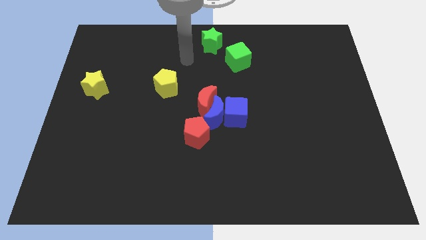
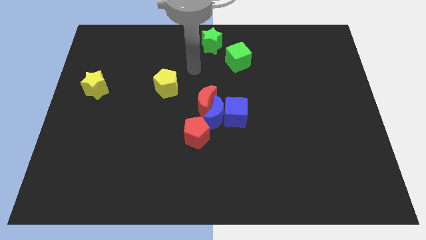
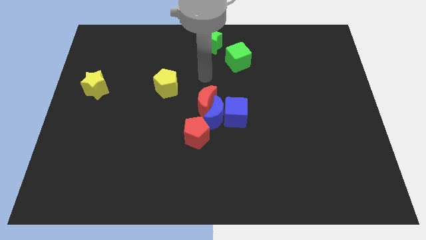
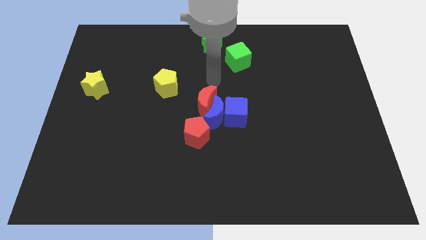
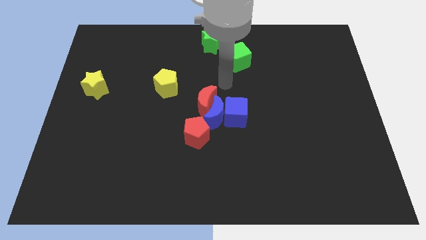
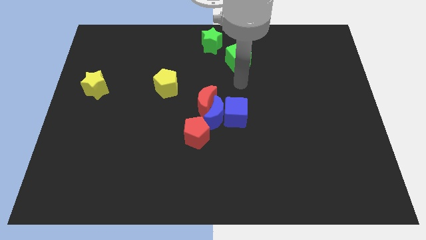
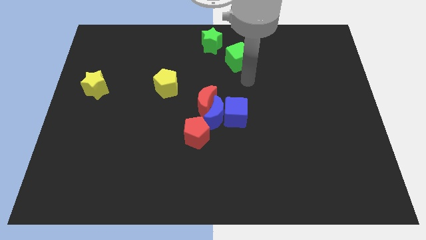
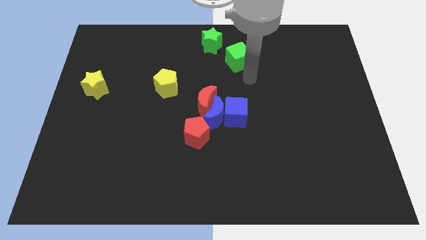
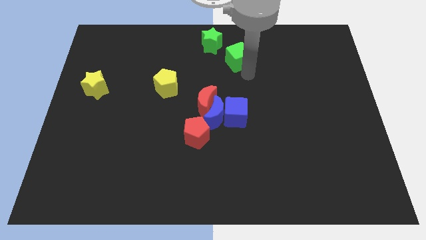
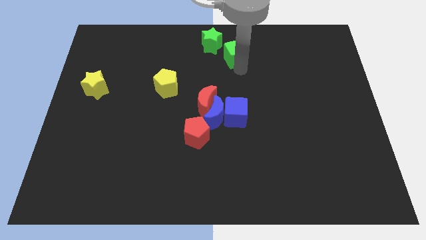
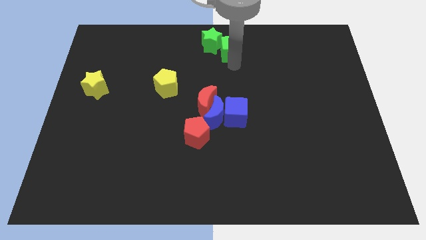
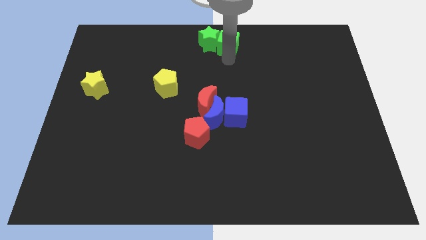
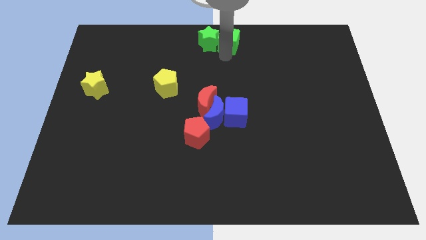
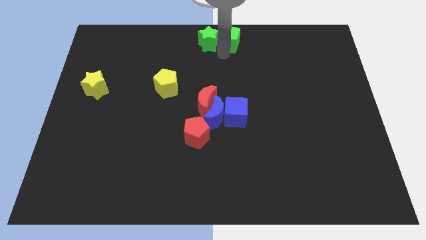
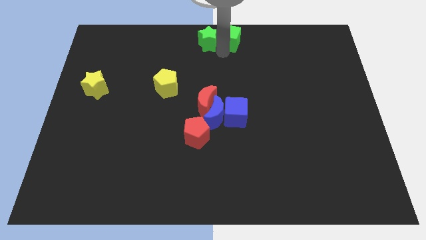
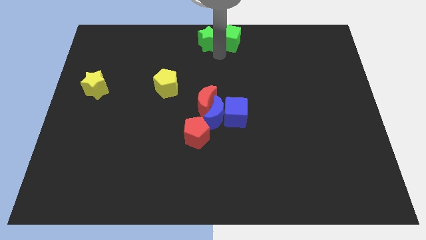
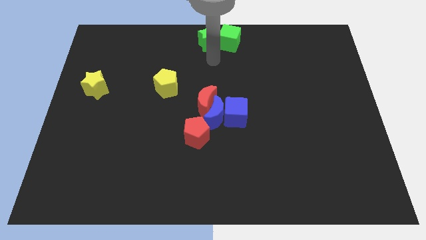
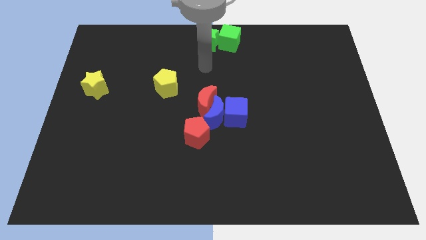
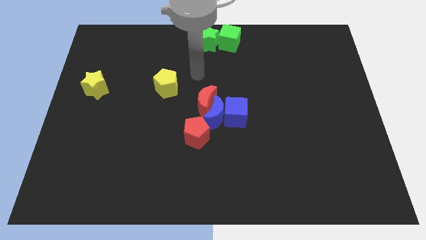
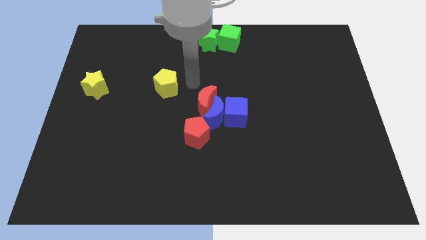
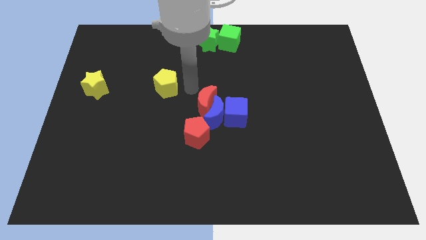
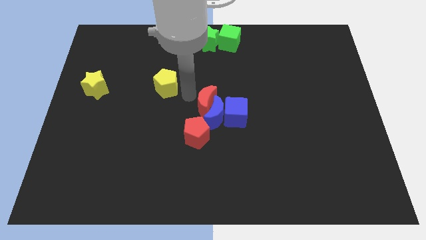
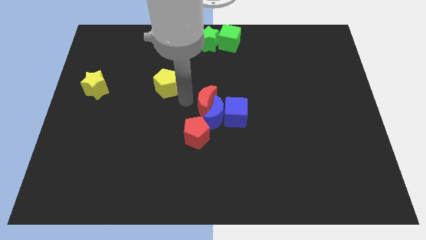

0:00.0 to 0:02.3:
push the green cube into the green star

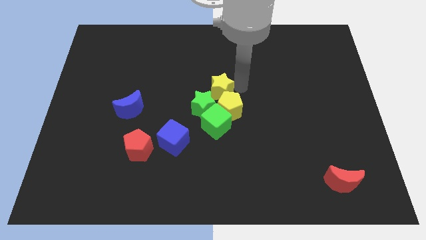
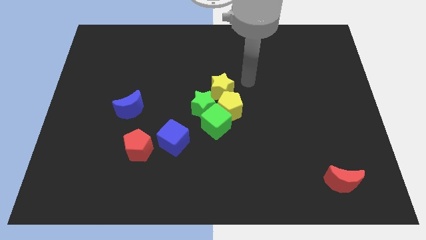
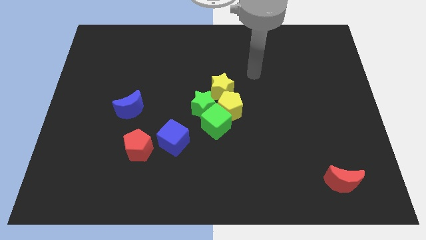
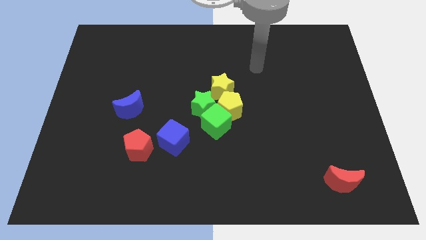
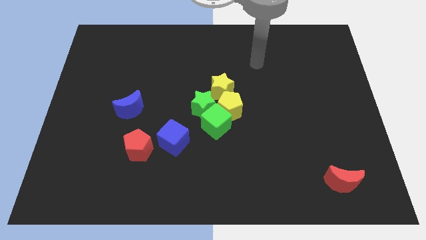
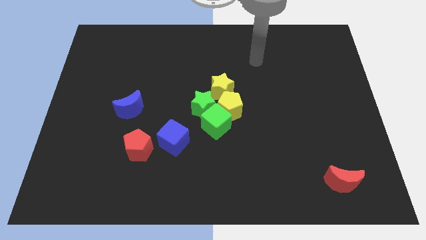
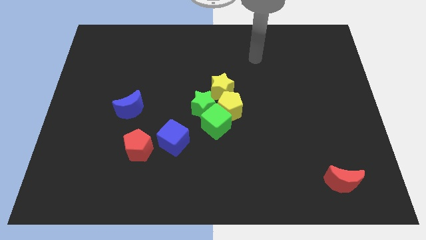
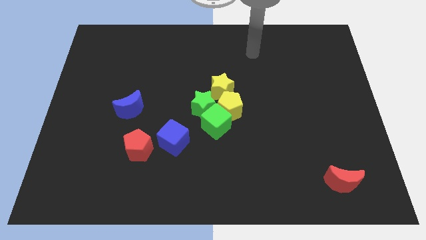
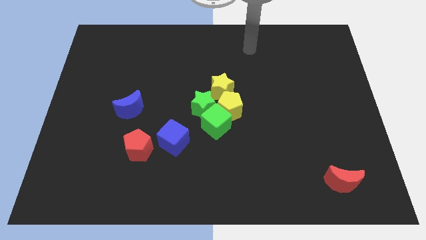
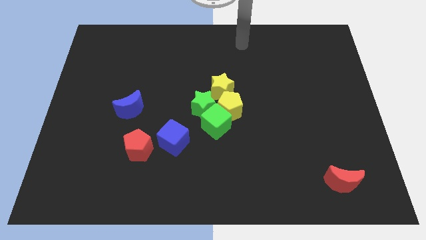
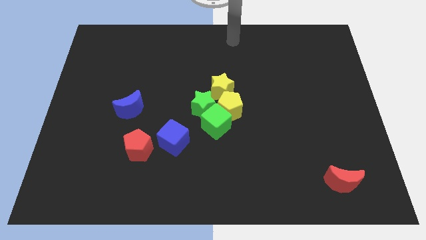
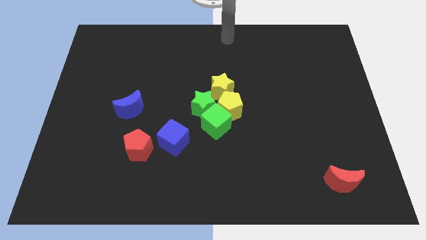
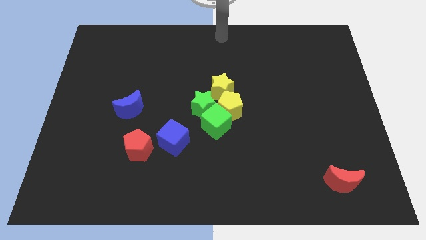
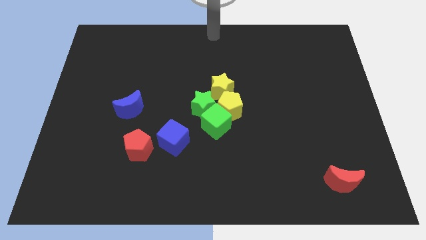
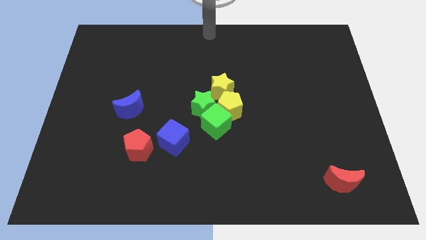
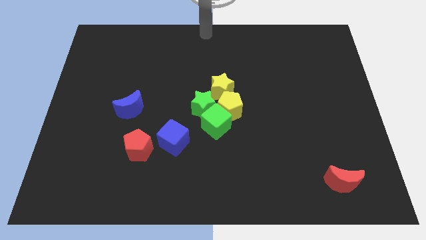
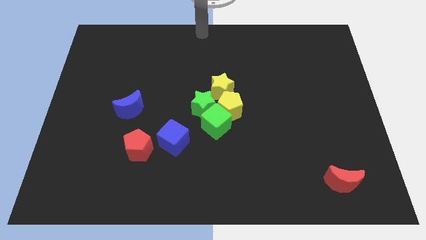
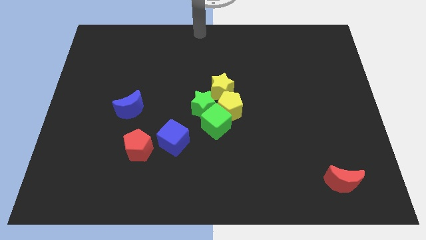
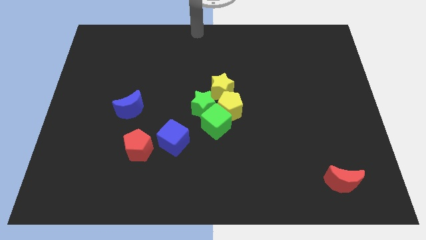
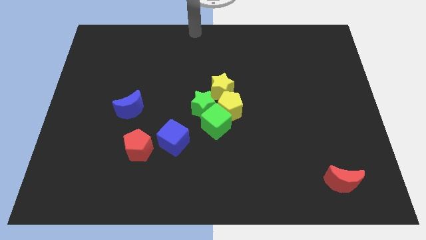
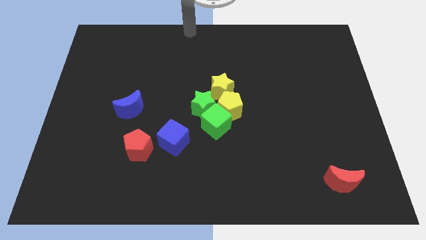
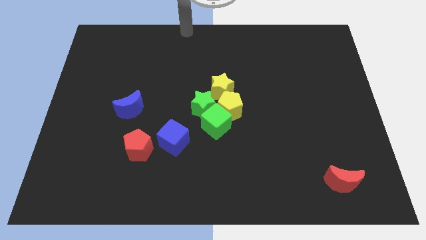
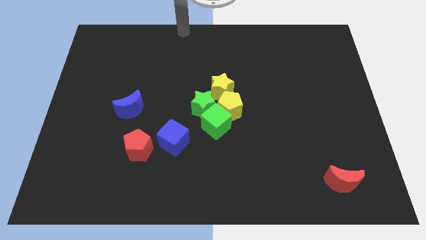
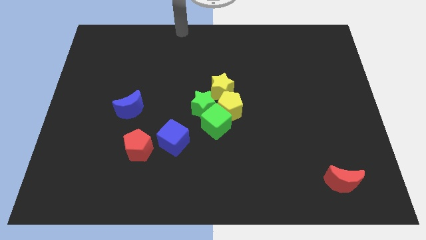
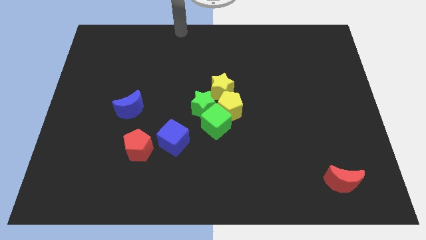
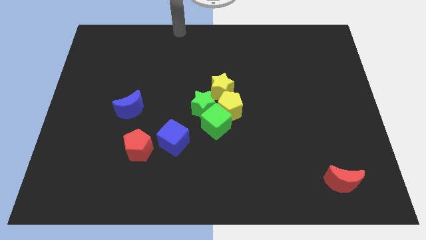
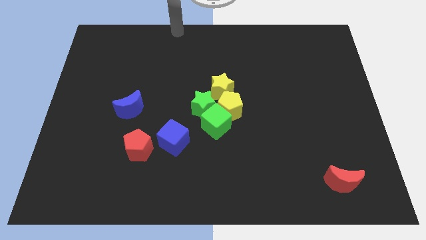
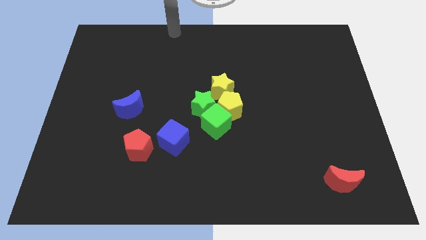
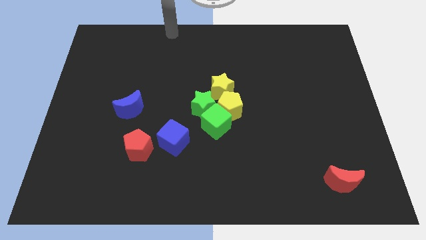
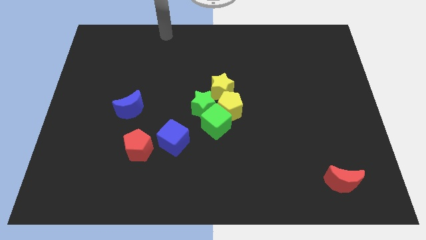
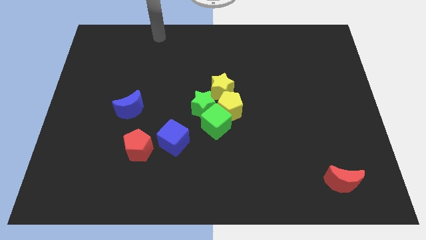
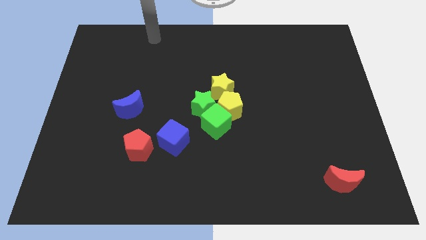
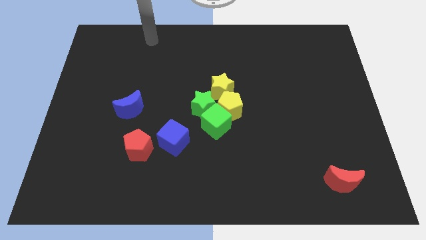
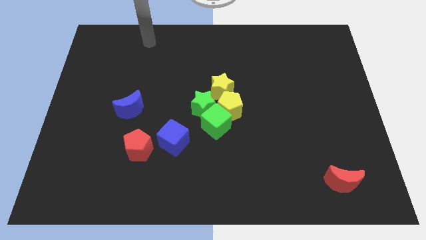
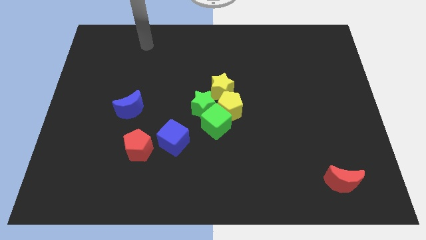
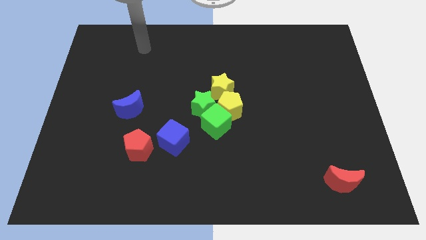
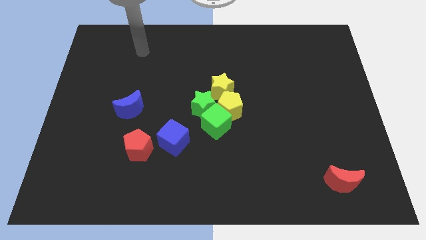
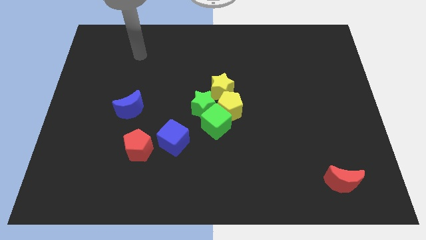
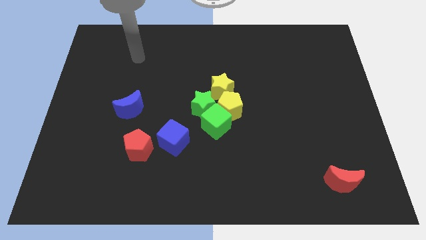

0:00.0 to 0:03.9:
move your arm to the top side of the blue crescent

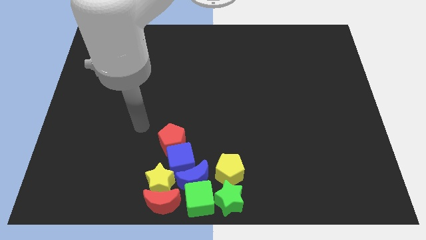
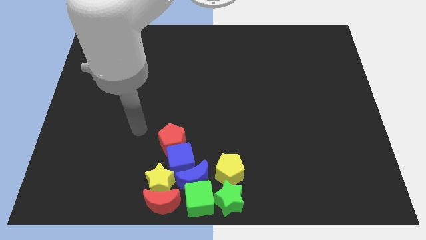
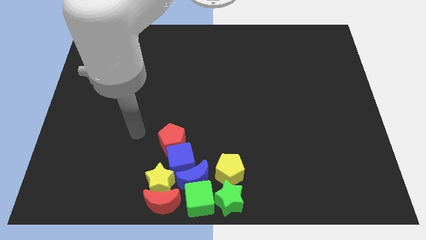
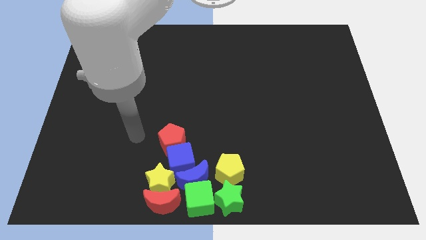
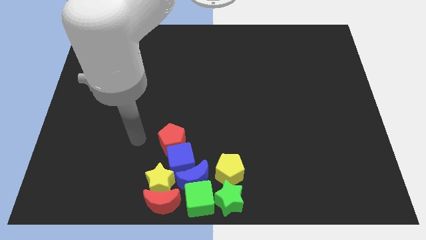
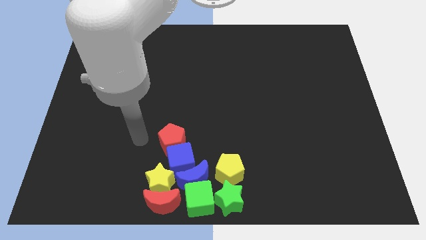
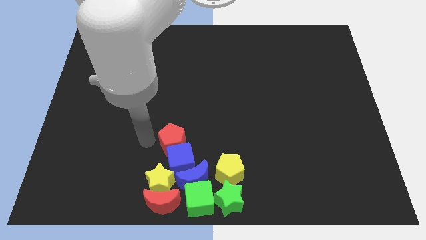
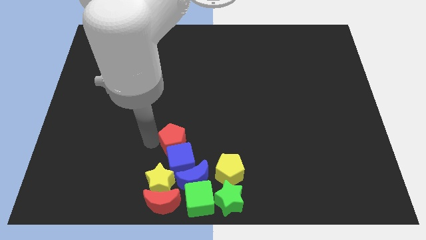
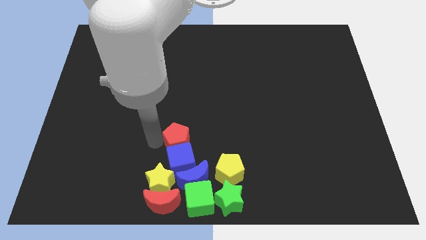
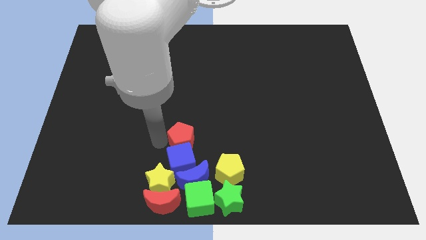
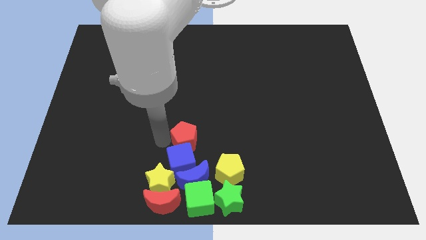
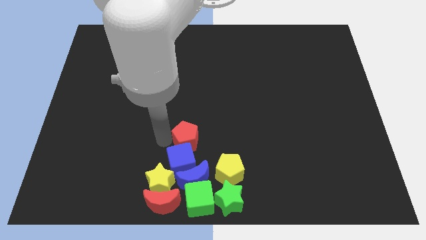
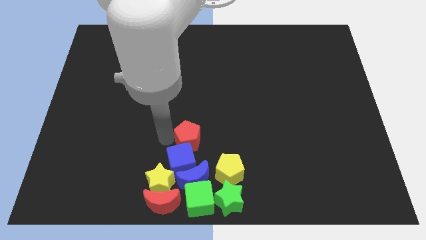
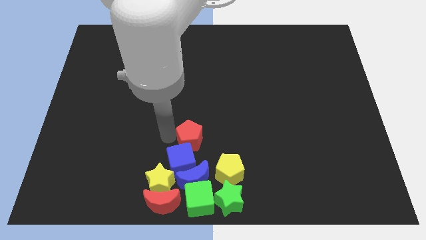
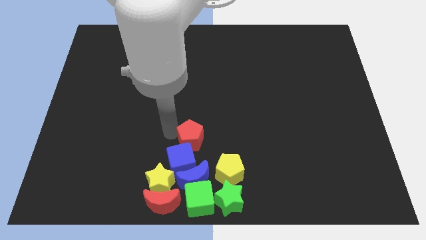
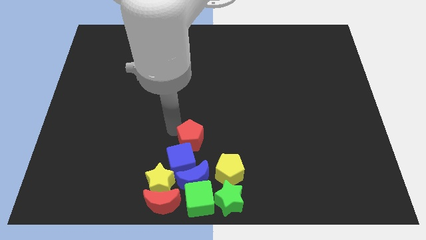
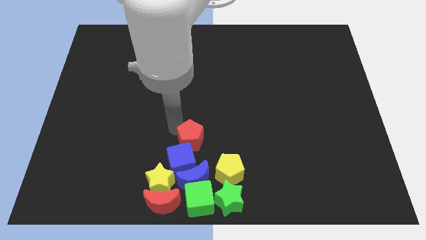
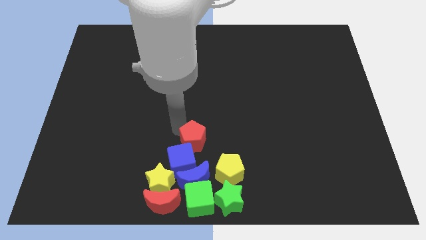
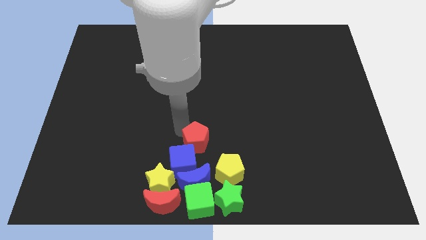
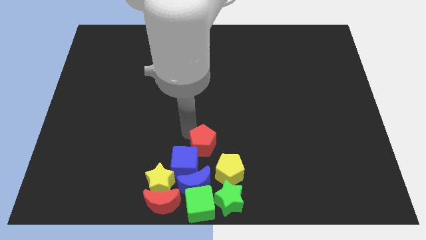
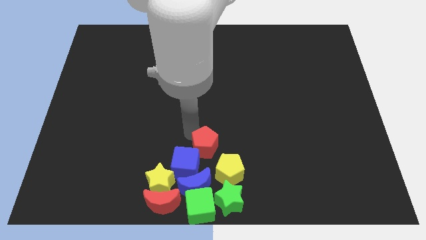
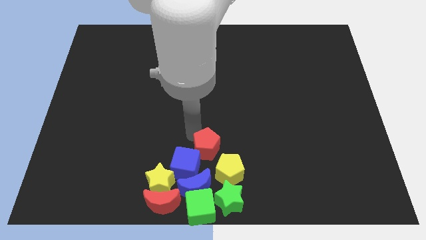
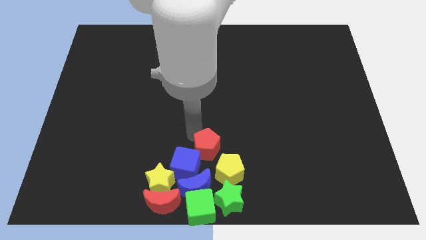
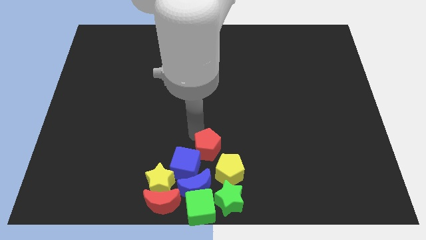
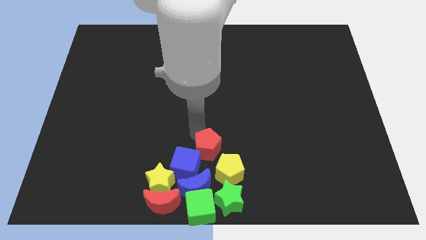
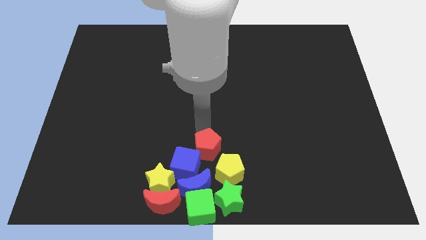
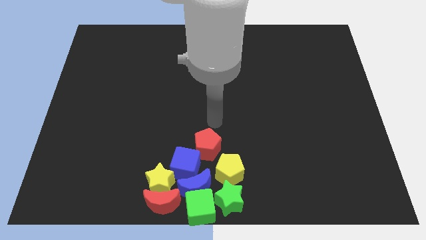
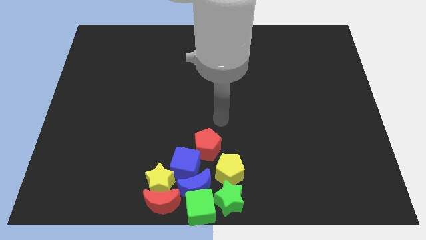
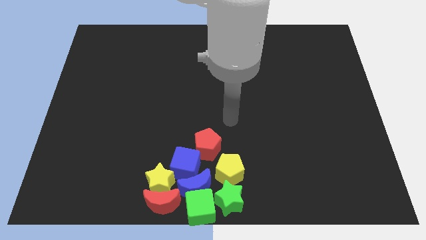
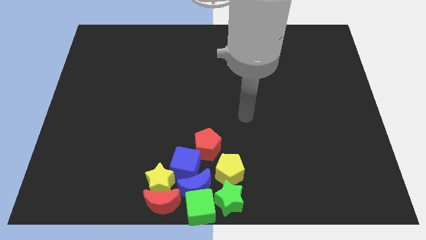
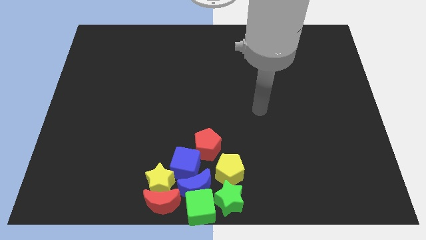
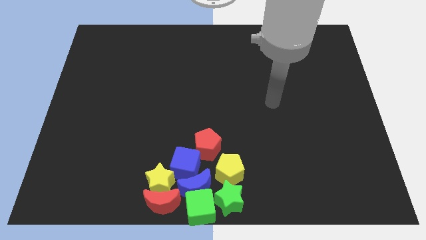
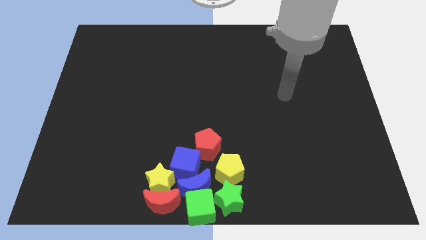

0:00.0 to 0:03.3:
push the green cube blue crescent blue cube with the red pentagon slightly towards the bottom center of the board
